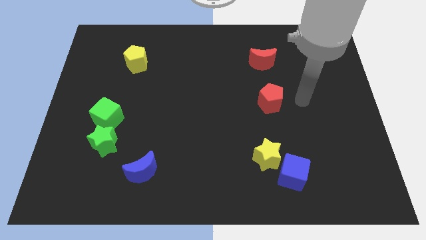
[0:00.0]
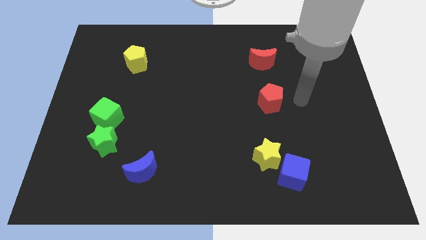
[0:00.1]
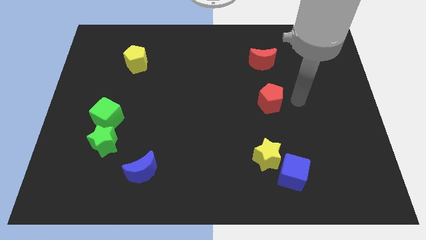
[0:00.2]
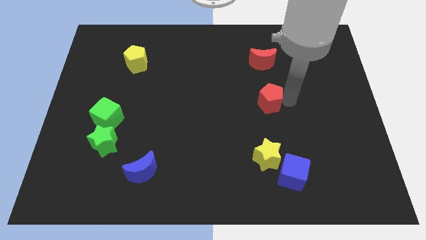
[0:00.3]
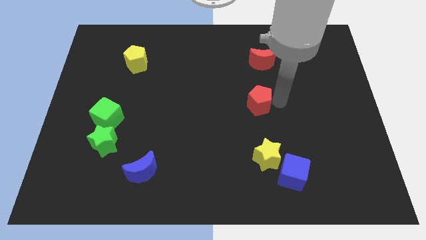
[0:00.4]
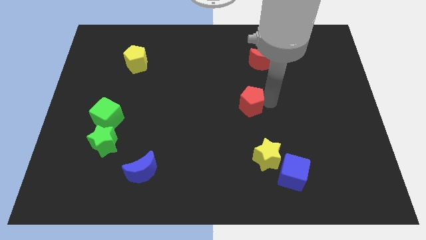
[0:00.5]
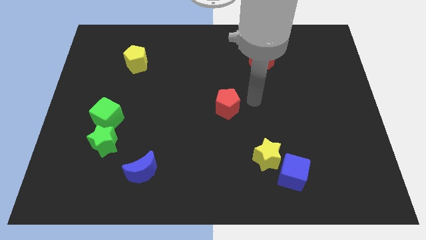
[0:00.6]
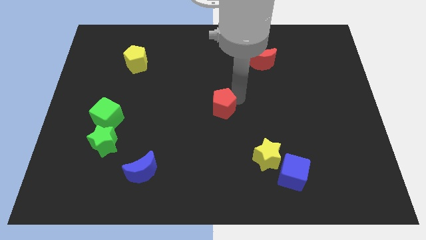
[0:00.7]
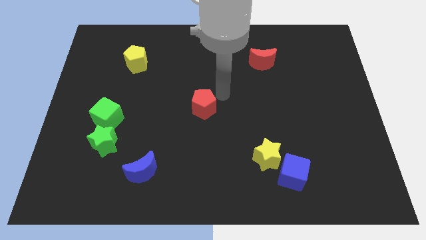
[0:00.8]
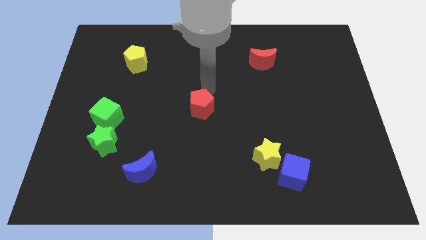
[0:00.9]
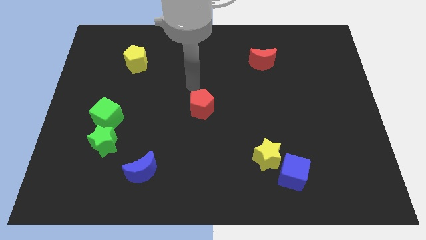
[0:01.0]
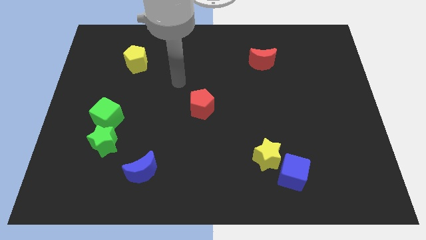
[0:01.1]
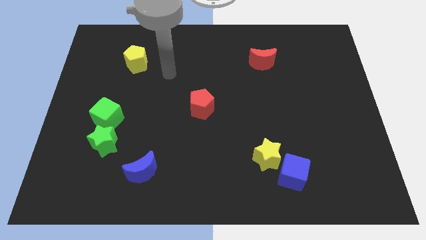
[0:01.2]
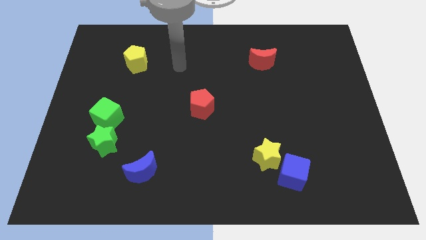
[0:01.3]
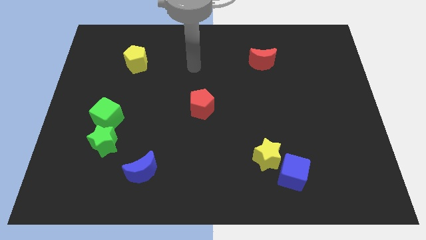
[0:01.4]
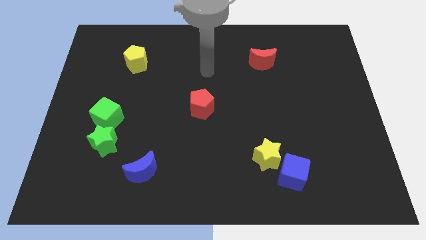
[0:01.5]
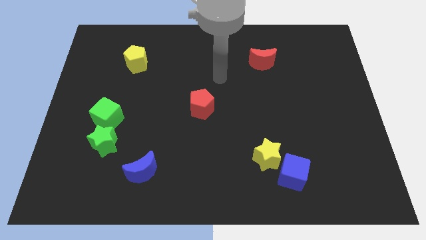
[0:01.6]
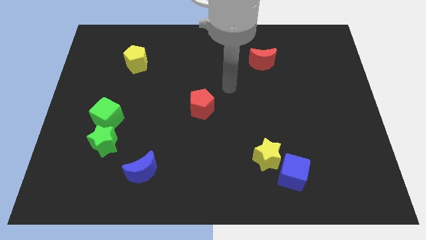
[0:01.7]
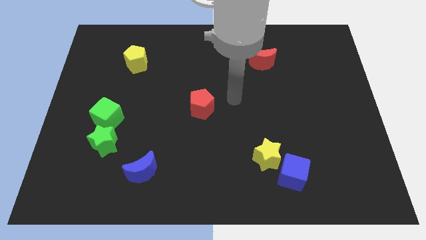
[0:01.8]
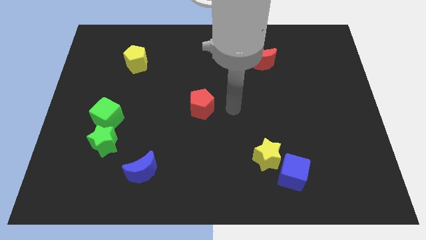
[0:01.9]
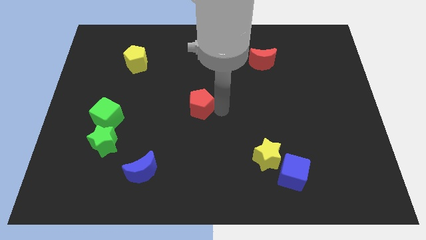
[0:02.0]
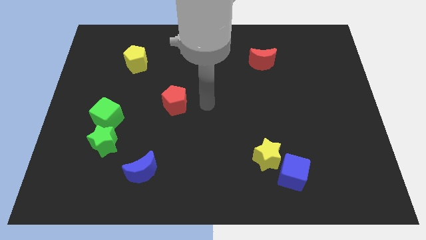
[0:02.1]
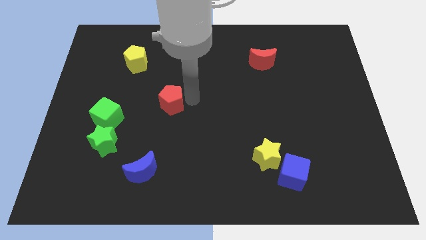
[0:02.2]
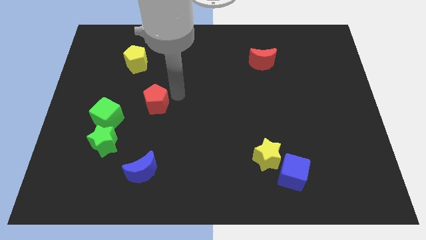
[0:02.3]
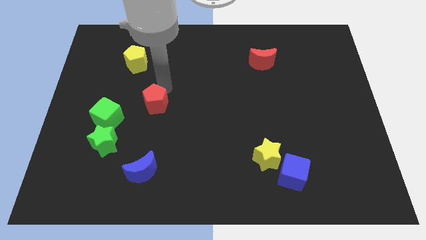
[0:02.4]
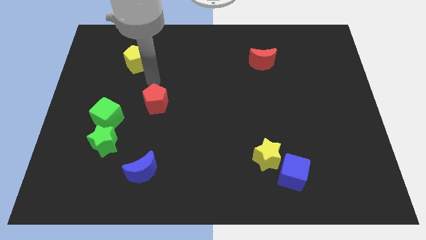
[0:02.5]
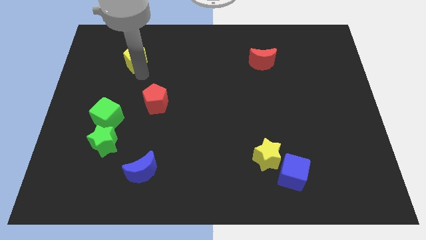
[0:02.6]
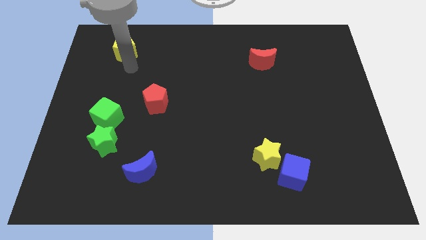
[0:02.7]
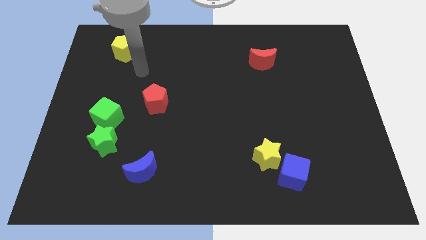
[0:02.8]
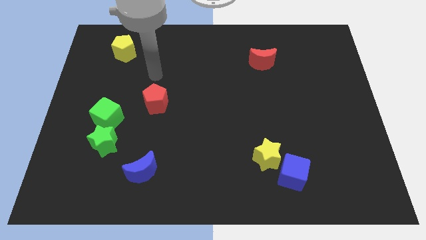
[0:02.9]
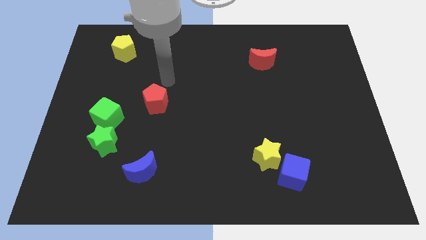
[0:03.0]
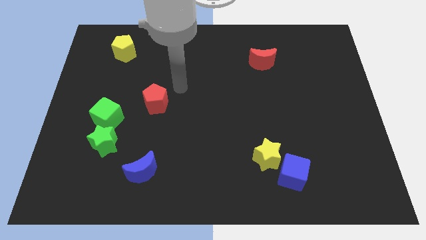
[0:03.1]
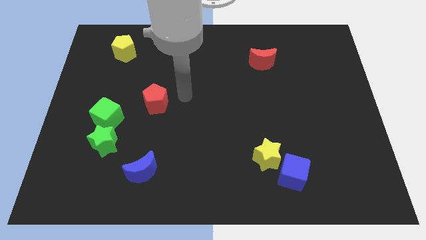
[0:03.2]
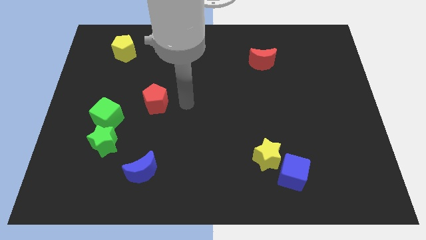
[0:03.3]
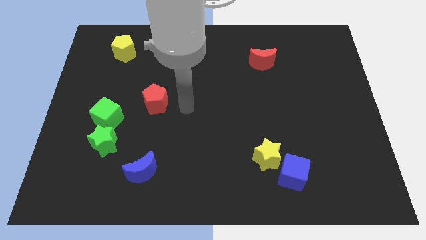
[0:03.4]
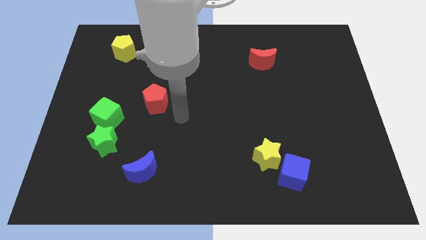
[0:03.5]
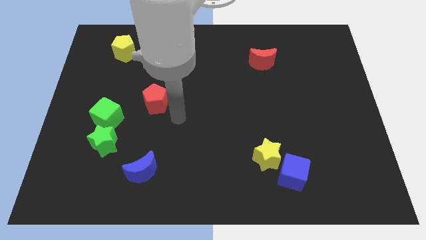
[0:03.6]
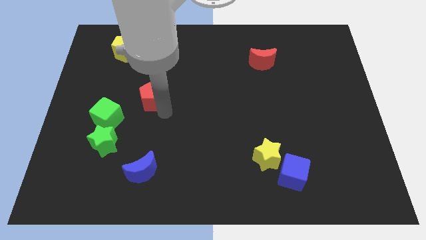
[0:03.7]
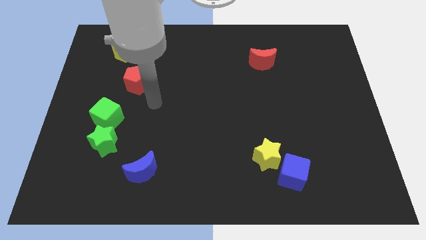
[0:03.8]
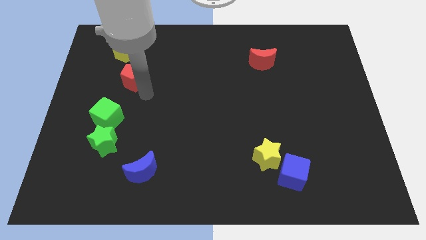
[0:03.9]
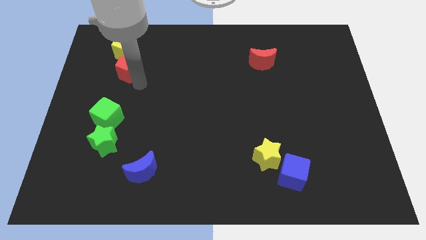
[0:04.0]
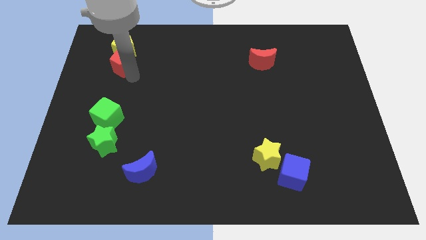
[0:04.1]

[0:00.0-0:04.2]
move the red pentagon below the yellow pentagon

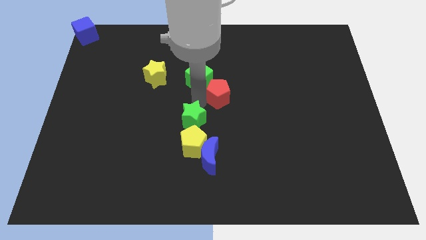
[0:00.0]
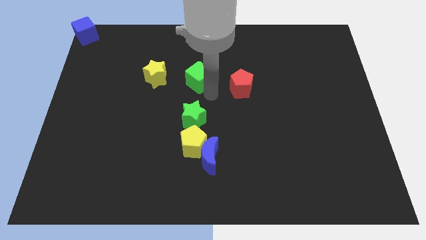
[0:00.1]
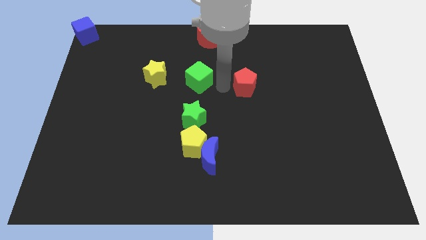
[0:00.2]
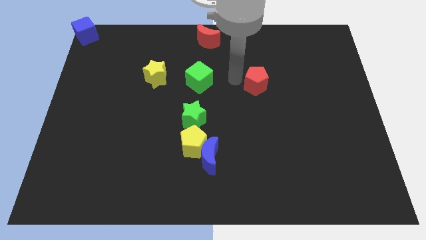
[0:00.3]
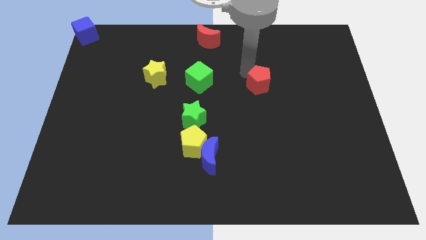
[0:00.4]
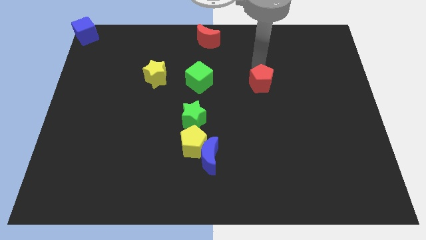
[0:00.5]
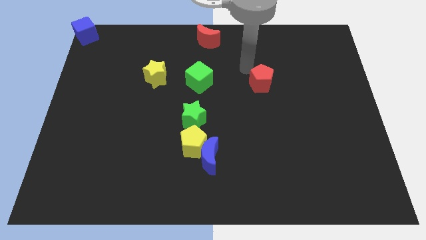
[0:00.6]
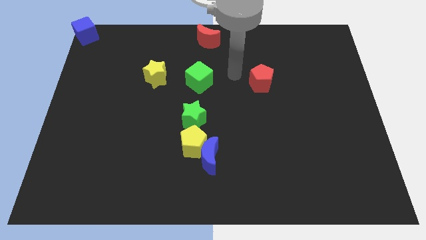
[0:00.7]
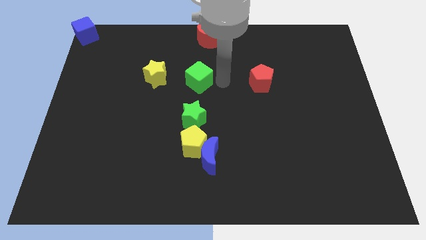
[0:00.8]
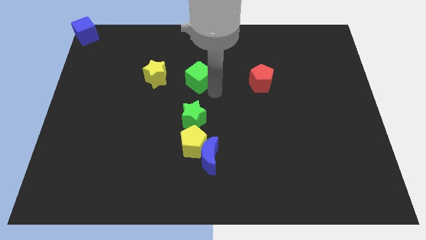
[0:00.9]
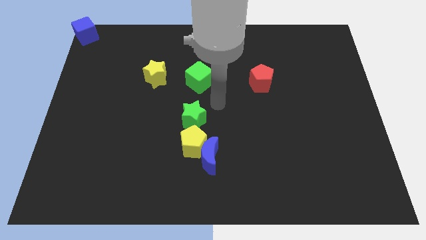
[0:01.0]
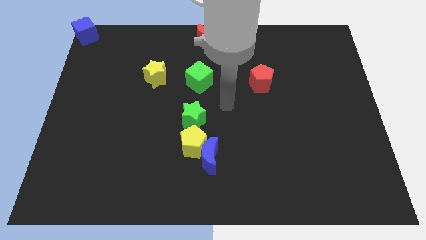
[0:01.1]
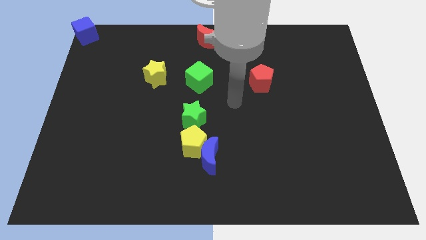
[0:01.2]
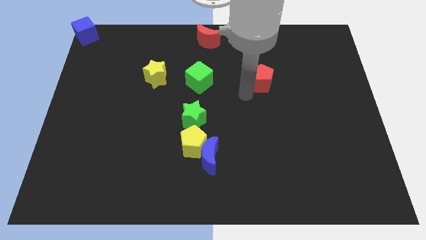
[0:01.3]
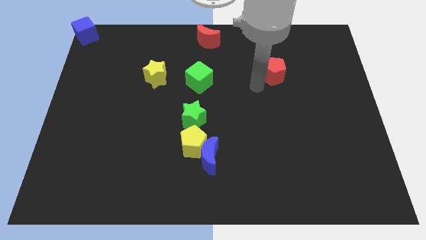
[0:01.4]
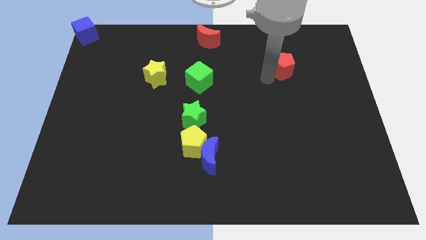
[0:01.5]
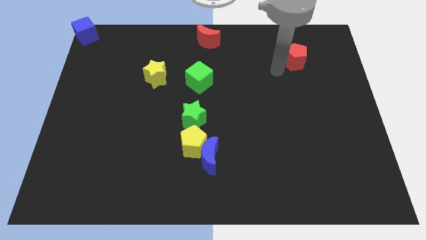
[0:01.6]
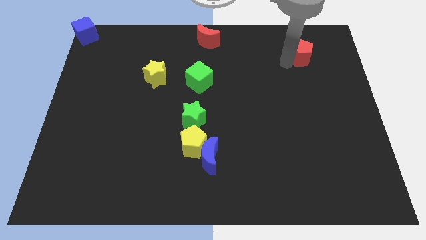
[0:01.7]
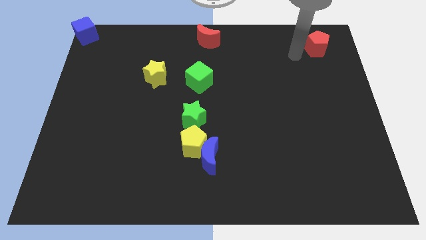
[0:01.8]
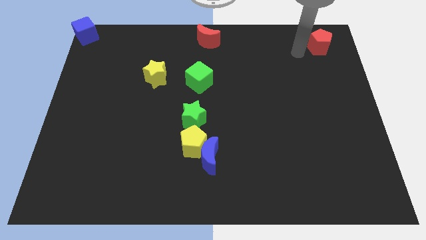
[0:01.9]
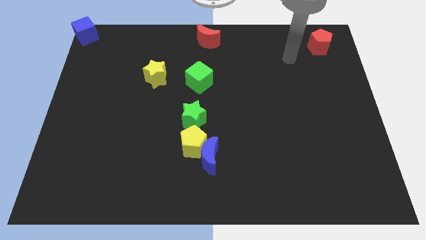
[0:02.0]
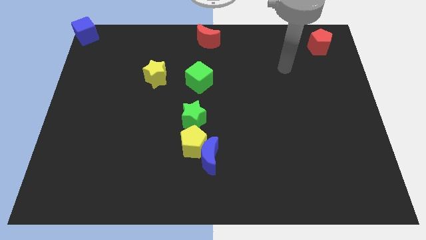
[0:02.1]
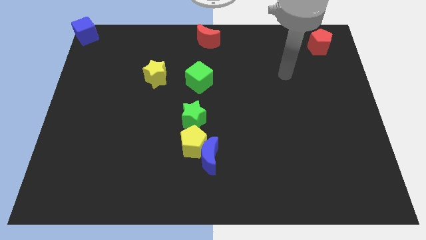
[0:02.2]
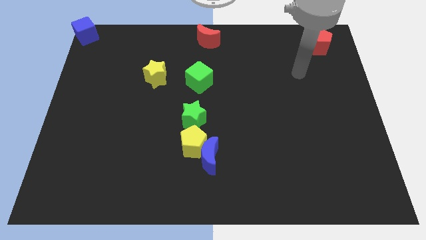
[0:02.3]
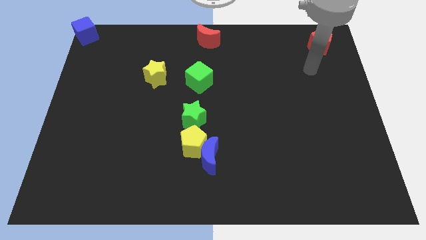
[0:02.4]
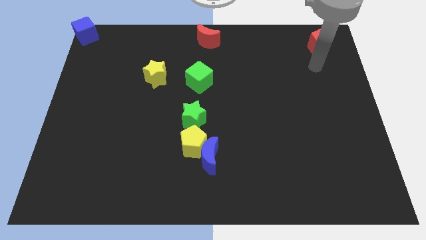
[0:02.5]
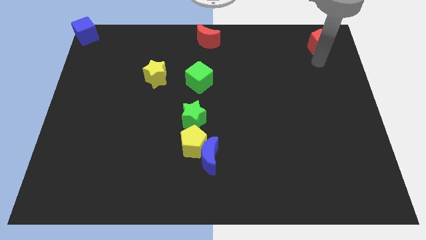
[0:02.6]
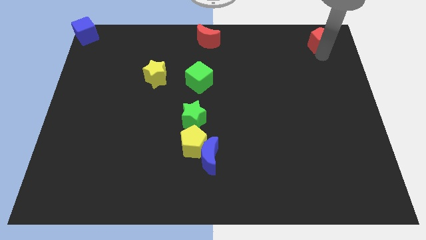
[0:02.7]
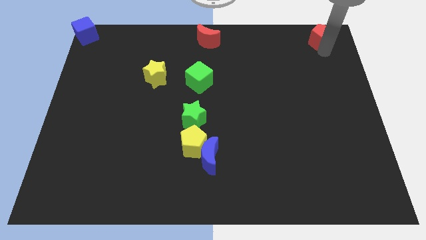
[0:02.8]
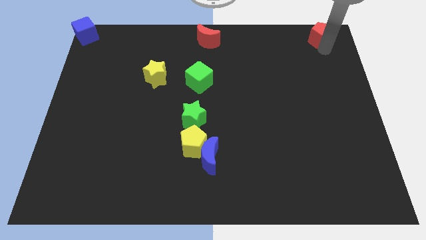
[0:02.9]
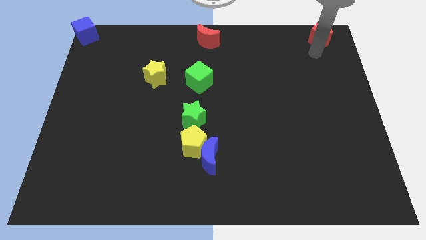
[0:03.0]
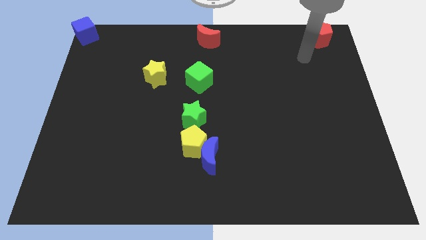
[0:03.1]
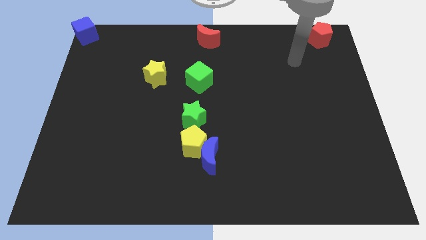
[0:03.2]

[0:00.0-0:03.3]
place the red pentagon horizontally to the right side of the red moon

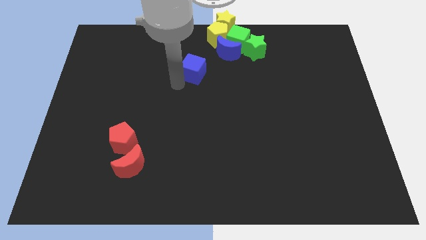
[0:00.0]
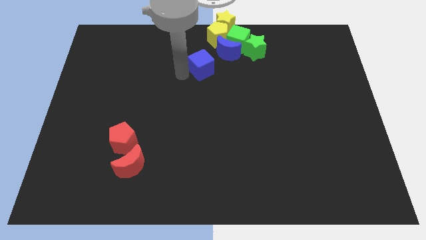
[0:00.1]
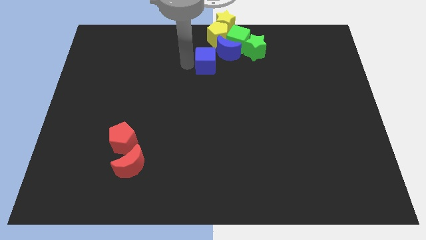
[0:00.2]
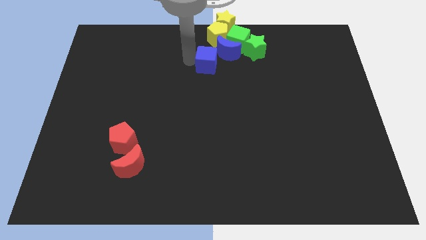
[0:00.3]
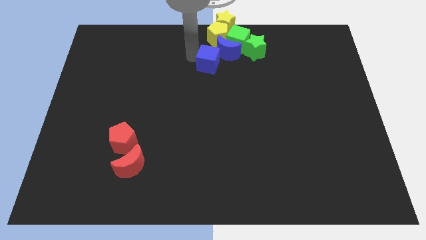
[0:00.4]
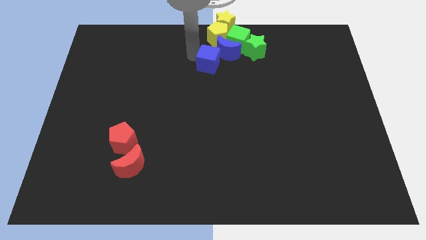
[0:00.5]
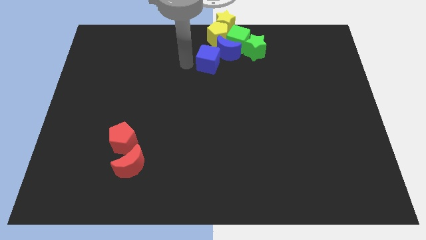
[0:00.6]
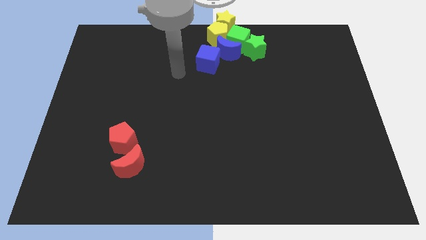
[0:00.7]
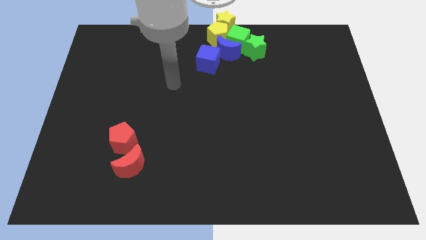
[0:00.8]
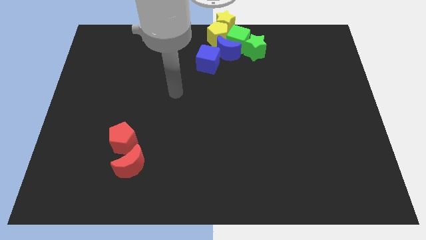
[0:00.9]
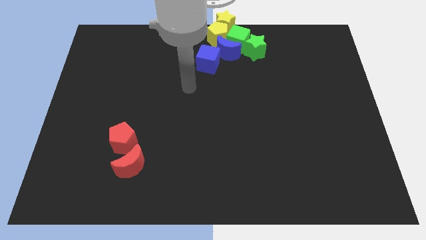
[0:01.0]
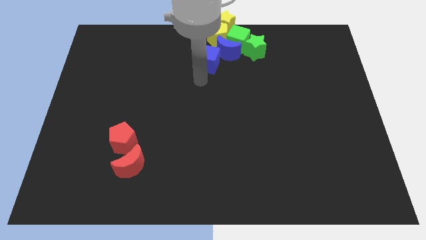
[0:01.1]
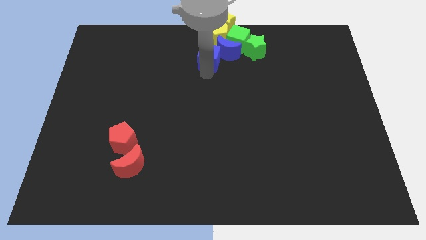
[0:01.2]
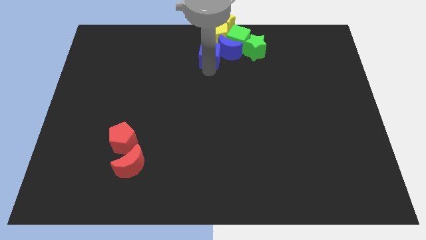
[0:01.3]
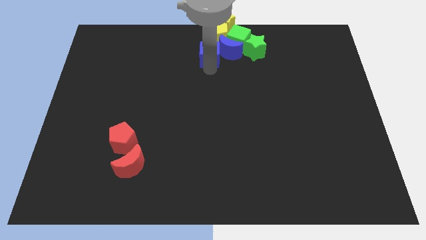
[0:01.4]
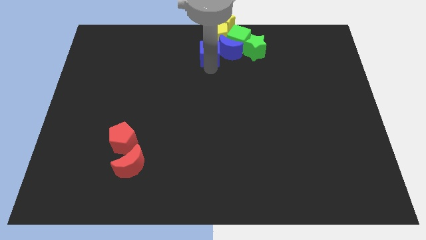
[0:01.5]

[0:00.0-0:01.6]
move the blue cube into the group of blocks
